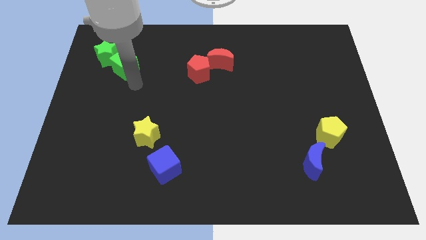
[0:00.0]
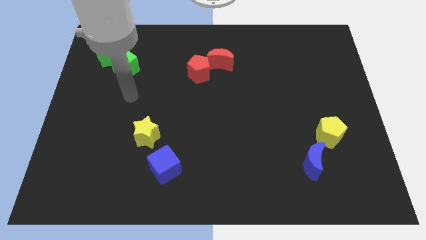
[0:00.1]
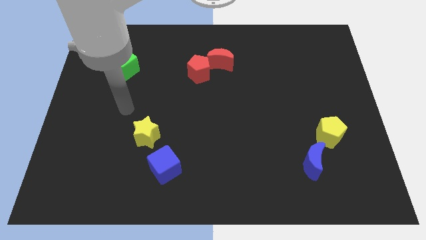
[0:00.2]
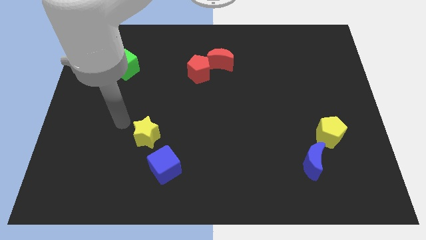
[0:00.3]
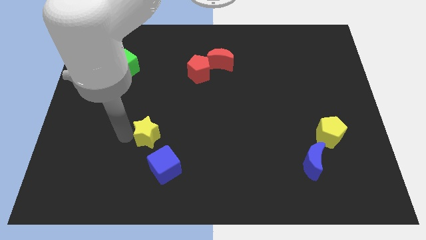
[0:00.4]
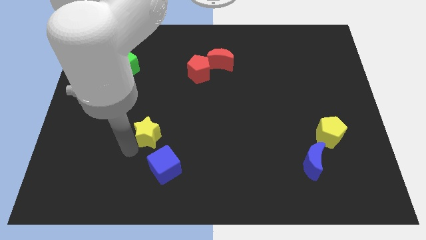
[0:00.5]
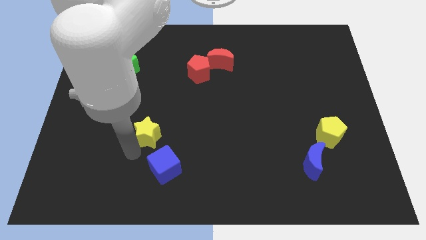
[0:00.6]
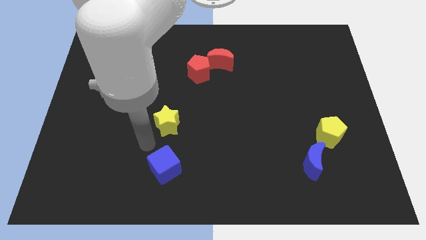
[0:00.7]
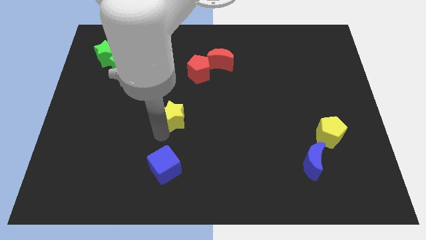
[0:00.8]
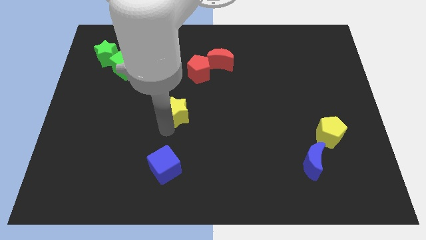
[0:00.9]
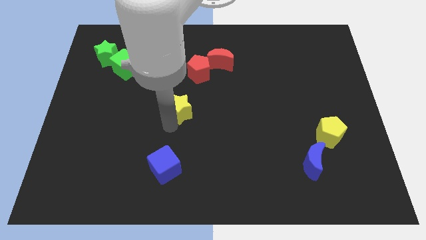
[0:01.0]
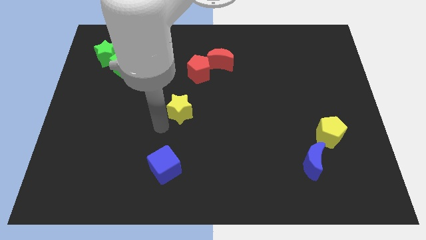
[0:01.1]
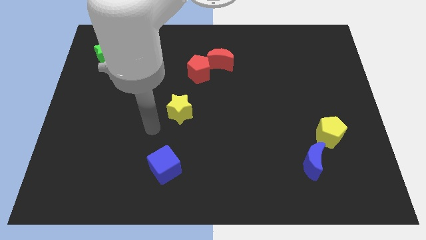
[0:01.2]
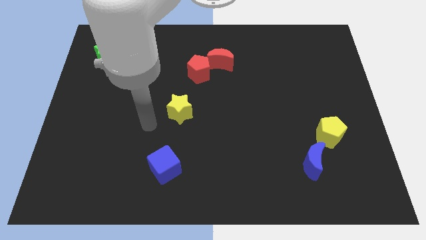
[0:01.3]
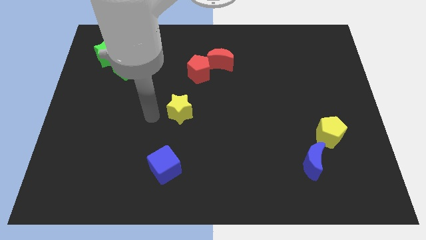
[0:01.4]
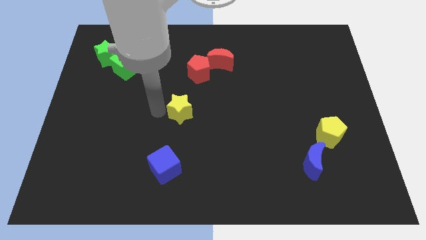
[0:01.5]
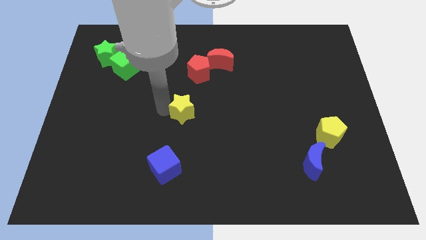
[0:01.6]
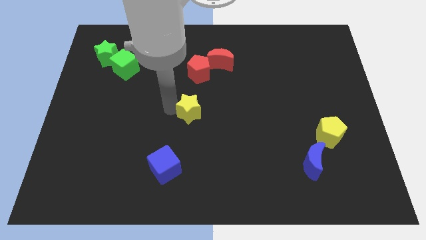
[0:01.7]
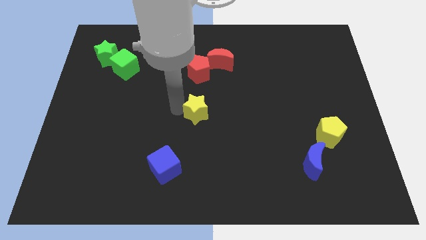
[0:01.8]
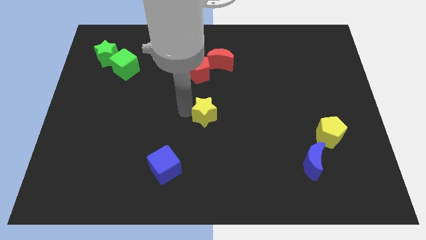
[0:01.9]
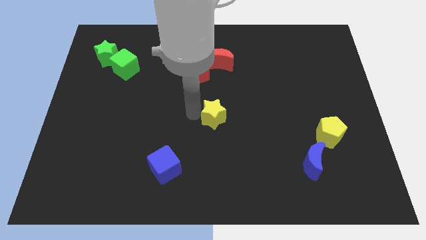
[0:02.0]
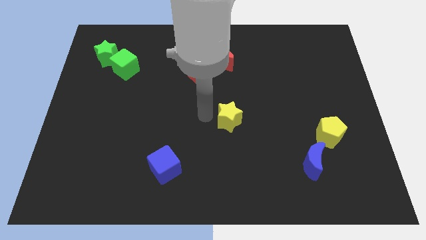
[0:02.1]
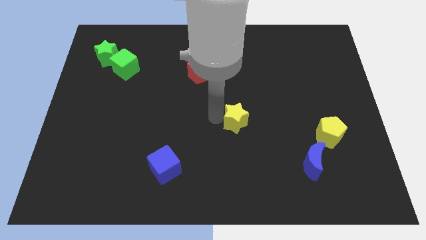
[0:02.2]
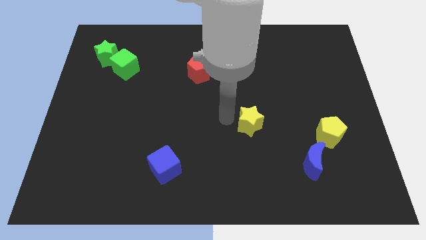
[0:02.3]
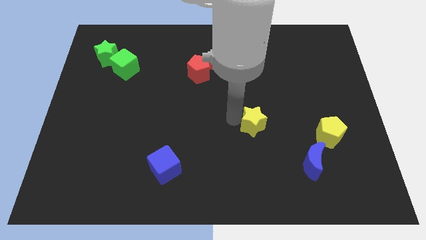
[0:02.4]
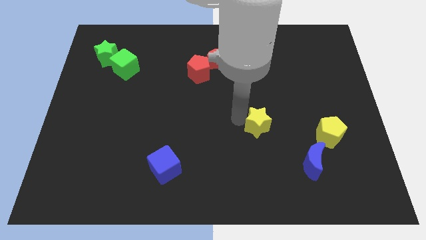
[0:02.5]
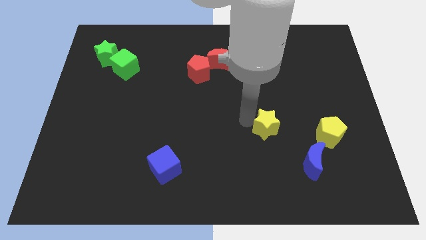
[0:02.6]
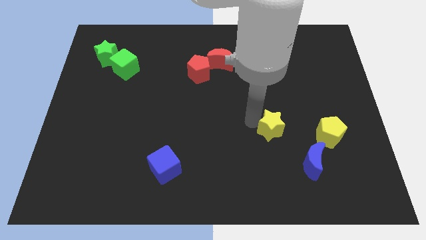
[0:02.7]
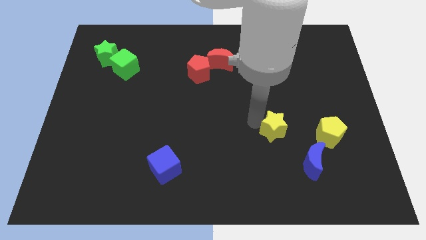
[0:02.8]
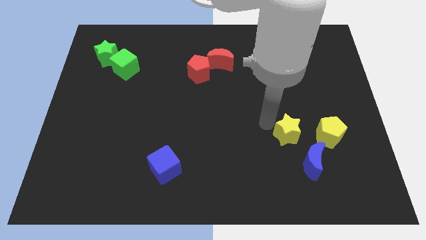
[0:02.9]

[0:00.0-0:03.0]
place the yellow star left to the yellow pentagon

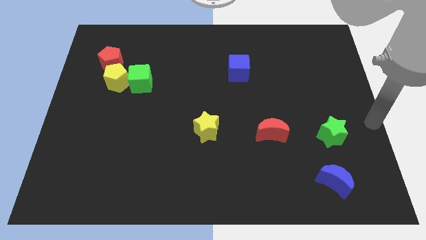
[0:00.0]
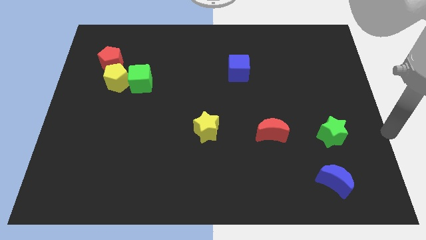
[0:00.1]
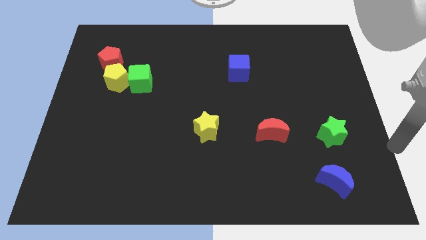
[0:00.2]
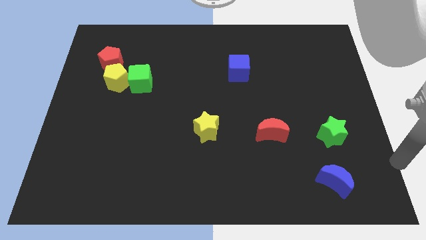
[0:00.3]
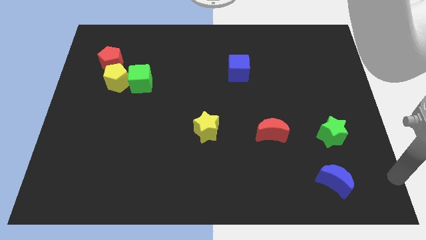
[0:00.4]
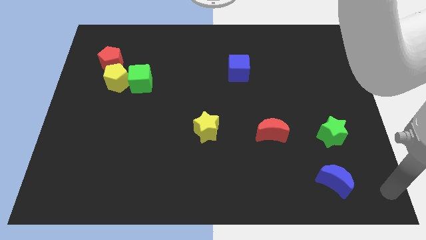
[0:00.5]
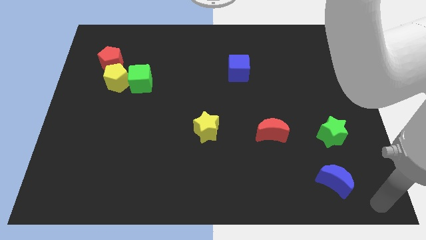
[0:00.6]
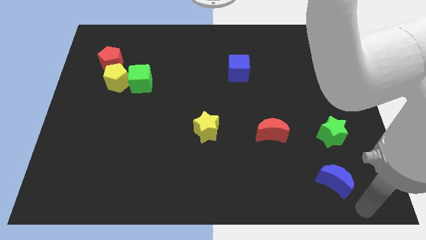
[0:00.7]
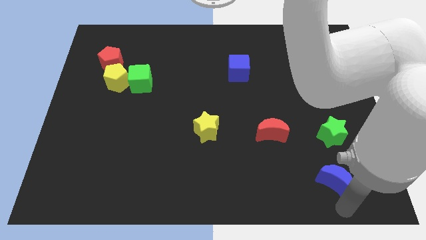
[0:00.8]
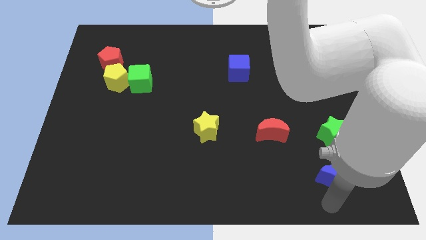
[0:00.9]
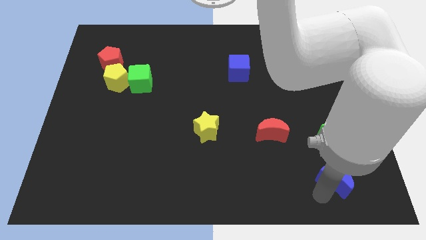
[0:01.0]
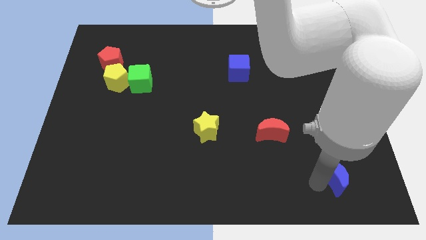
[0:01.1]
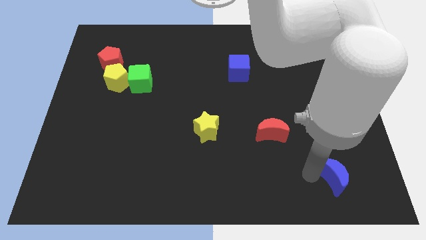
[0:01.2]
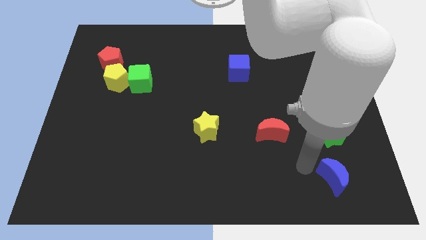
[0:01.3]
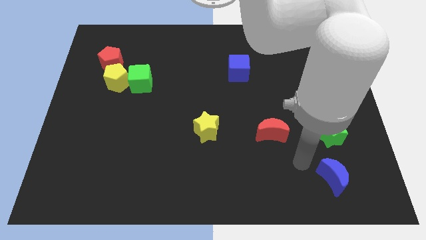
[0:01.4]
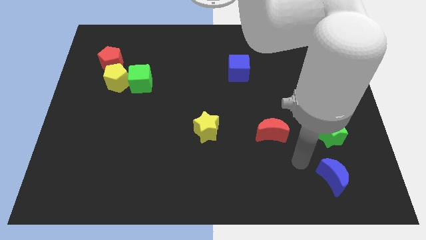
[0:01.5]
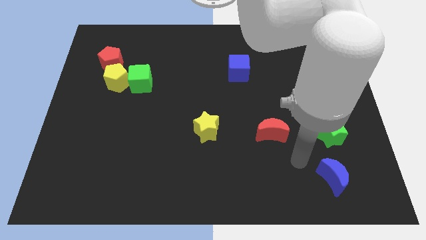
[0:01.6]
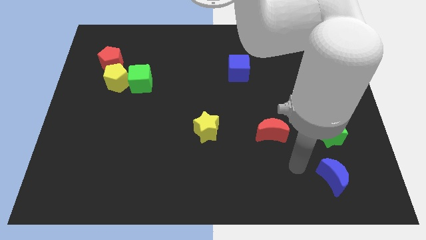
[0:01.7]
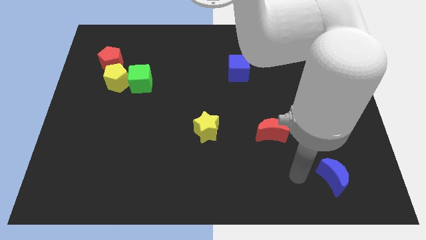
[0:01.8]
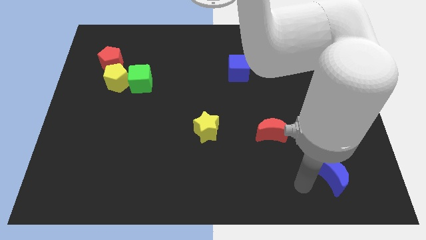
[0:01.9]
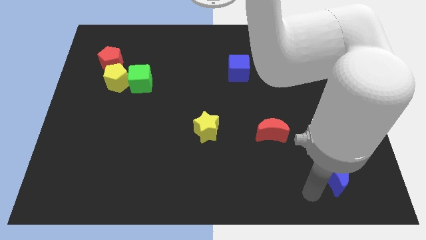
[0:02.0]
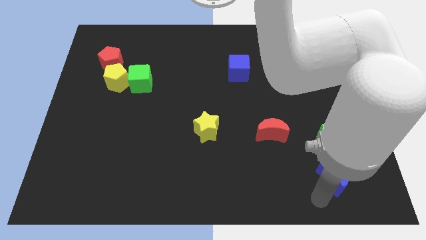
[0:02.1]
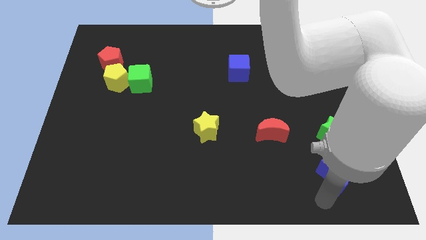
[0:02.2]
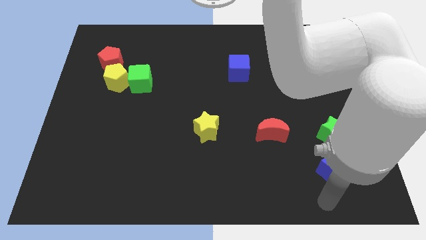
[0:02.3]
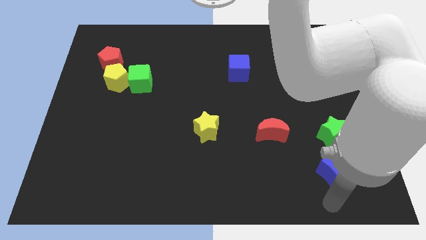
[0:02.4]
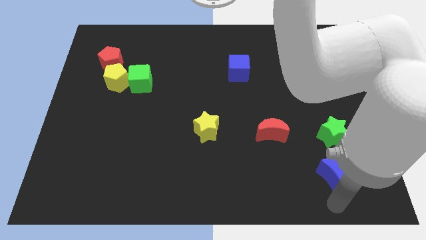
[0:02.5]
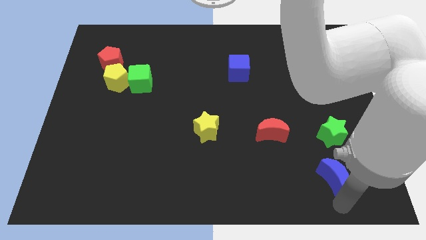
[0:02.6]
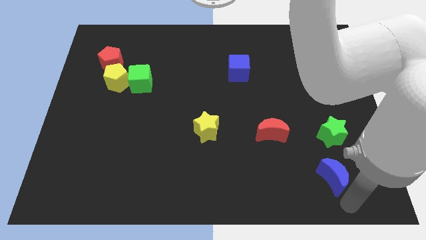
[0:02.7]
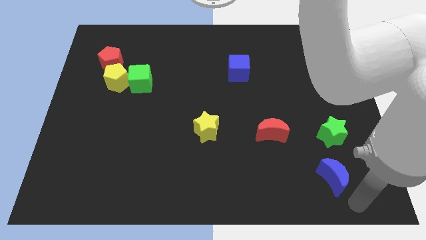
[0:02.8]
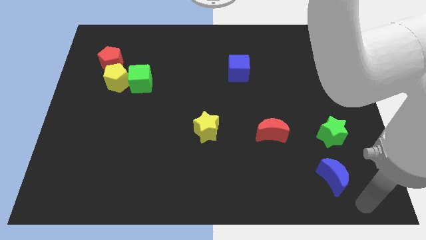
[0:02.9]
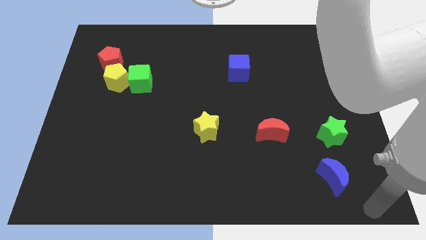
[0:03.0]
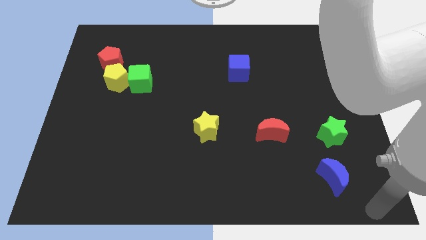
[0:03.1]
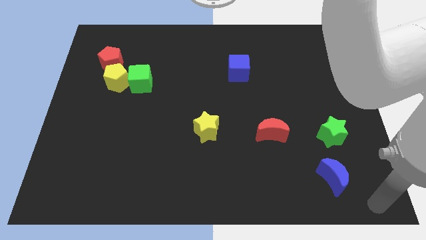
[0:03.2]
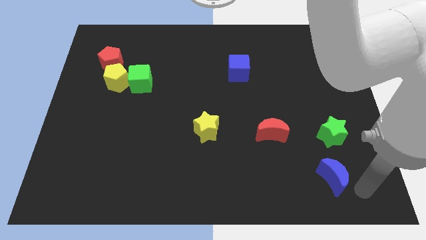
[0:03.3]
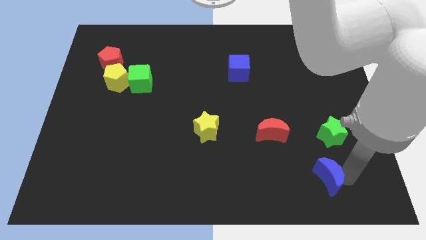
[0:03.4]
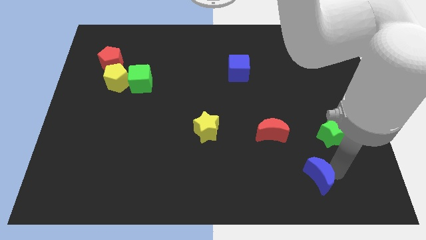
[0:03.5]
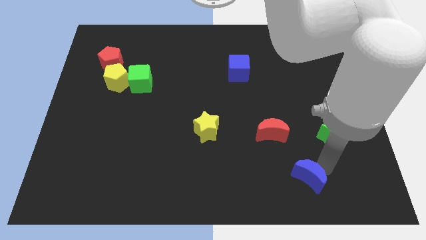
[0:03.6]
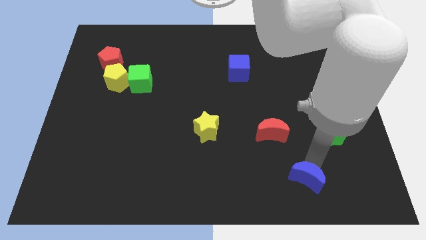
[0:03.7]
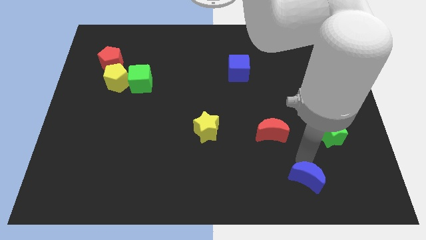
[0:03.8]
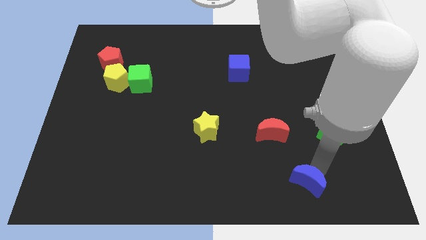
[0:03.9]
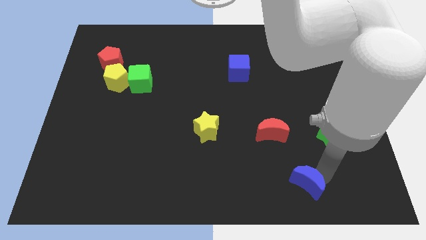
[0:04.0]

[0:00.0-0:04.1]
slide blue moon to bottom right of red moon

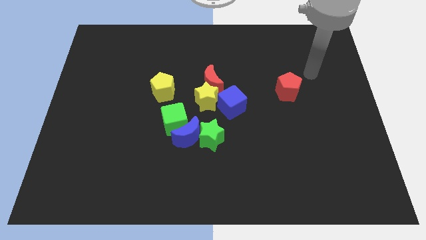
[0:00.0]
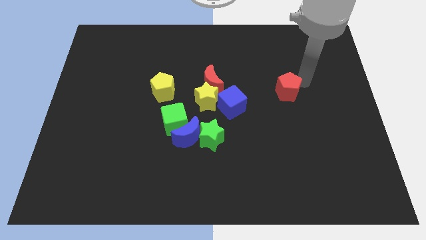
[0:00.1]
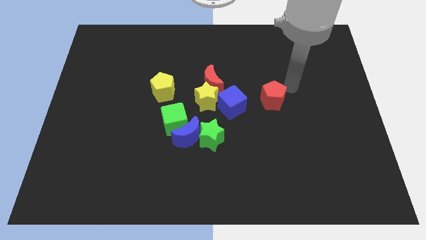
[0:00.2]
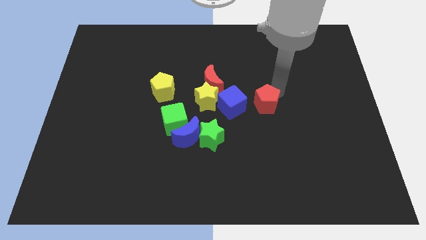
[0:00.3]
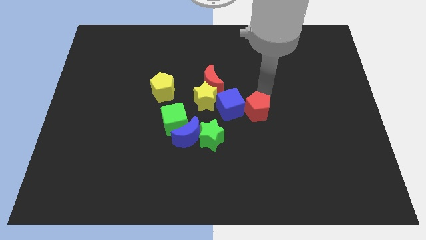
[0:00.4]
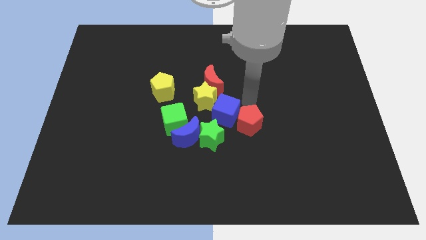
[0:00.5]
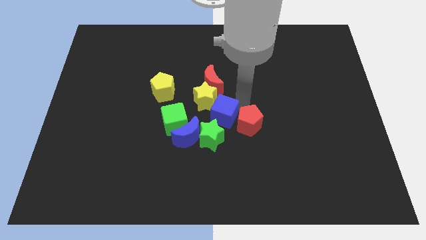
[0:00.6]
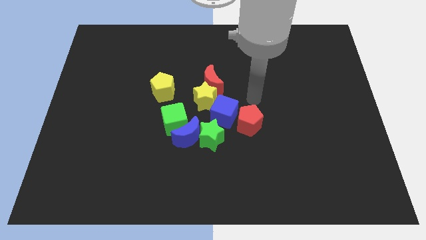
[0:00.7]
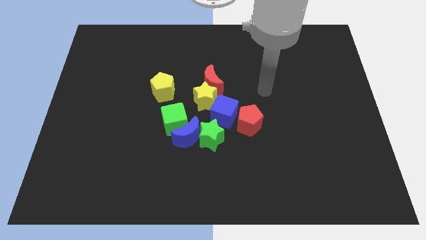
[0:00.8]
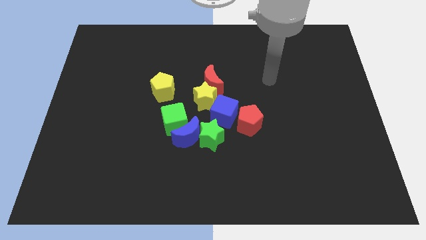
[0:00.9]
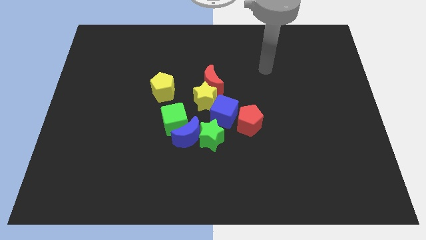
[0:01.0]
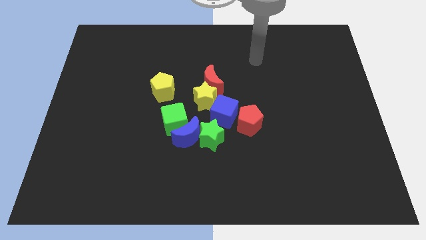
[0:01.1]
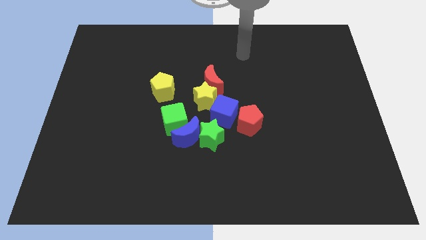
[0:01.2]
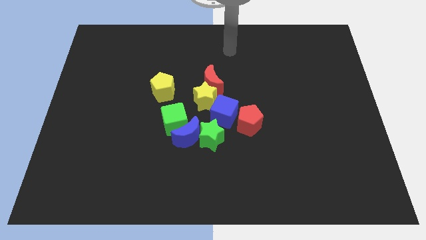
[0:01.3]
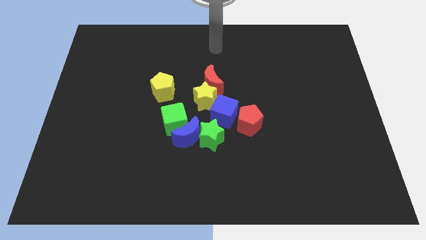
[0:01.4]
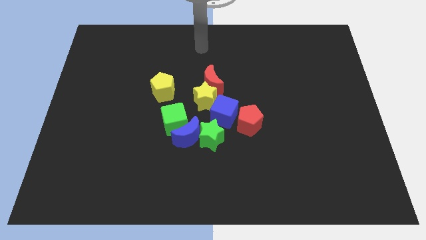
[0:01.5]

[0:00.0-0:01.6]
place the red pentagon beside blue cube

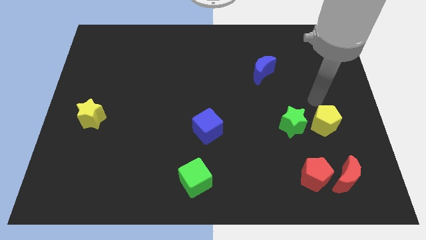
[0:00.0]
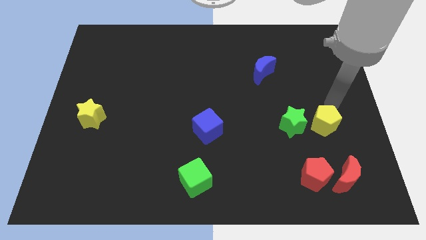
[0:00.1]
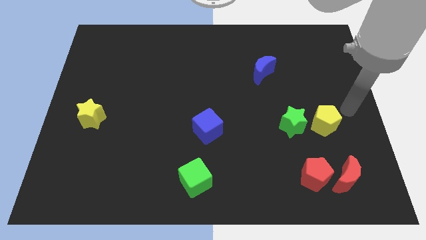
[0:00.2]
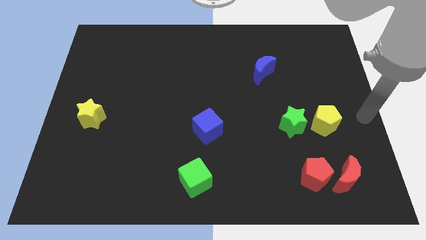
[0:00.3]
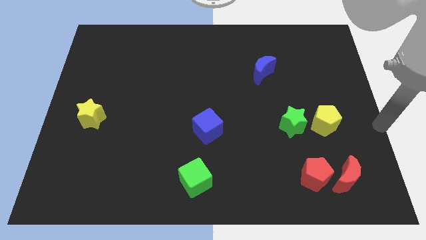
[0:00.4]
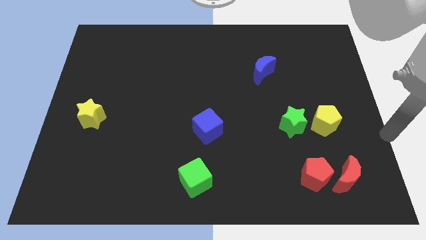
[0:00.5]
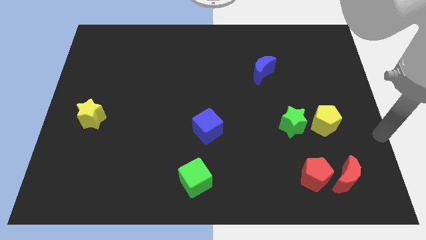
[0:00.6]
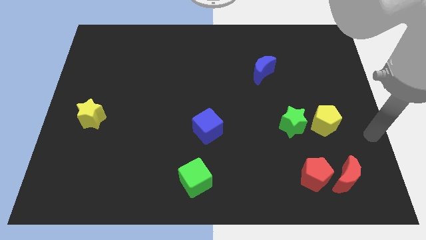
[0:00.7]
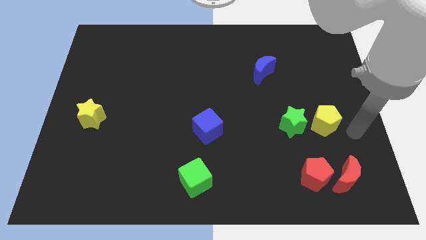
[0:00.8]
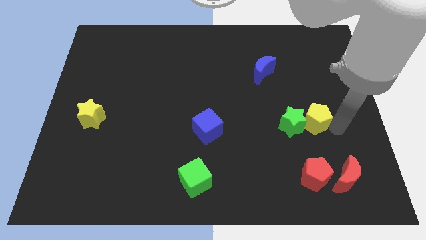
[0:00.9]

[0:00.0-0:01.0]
push the yellow pentagon into green star
